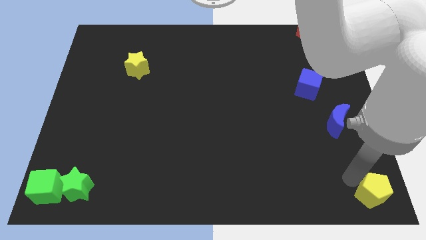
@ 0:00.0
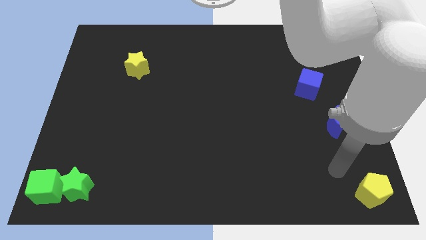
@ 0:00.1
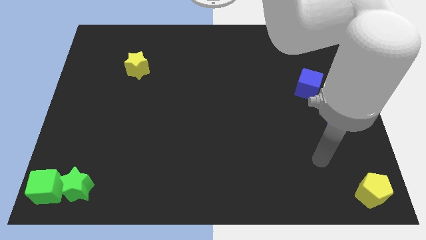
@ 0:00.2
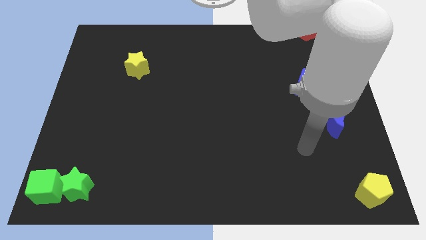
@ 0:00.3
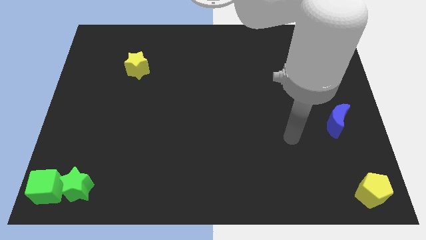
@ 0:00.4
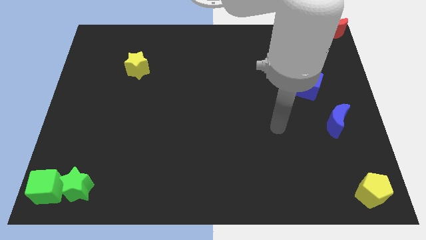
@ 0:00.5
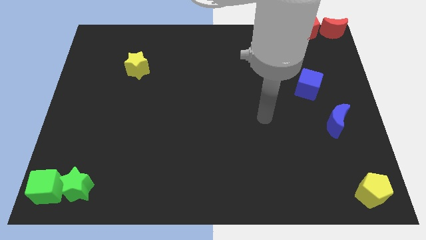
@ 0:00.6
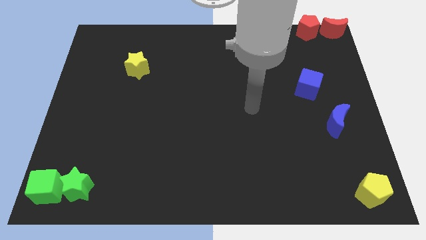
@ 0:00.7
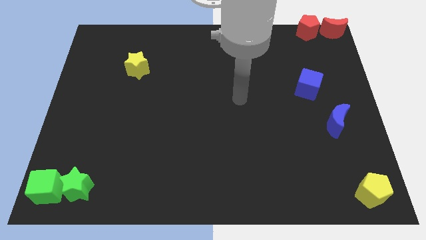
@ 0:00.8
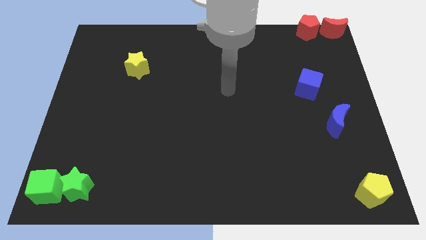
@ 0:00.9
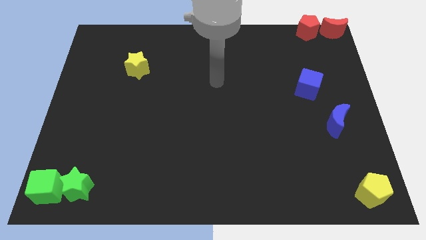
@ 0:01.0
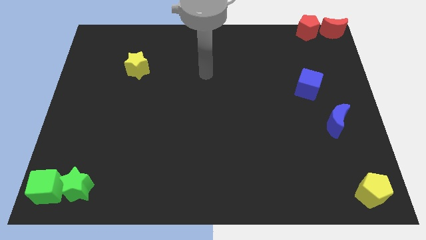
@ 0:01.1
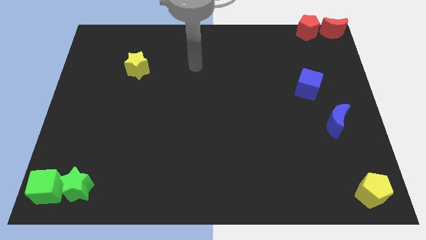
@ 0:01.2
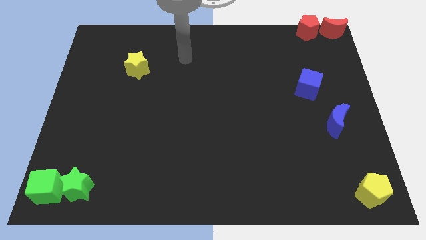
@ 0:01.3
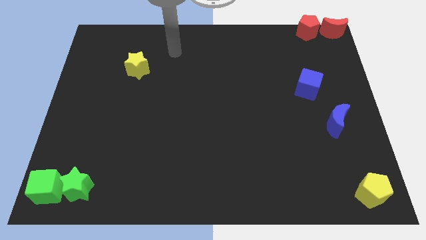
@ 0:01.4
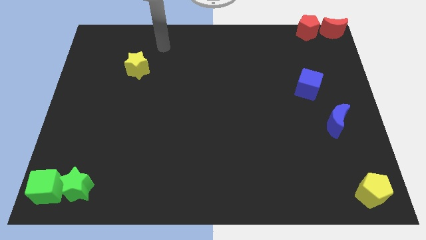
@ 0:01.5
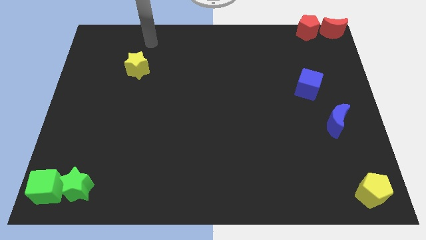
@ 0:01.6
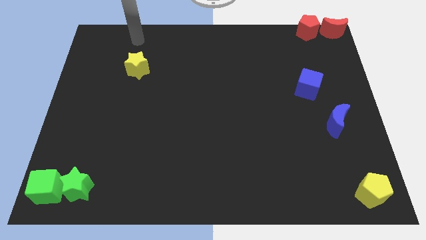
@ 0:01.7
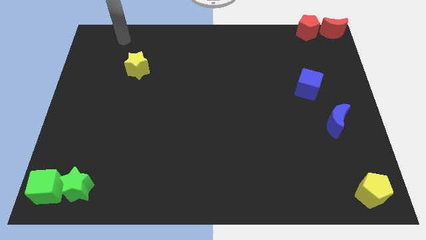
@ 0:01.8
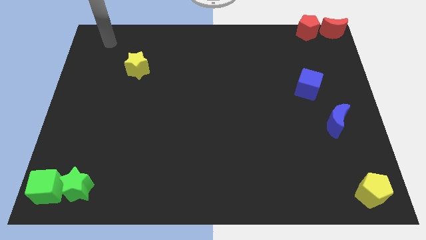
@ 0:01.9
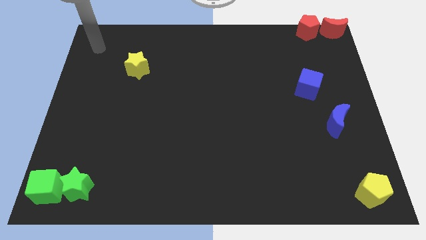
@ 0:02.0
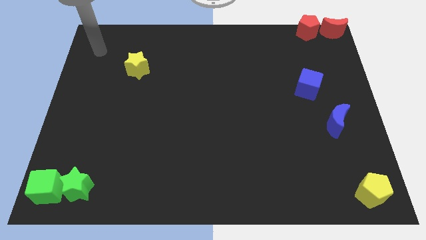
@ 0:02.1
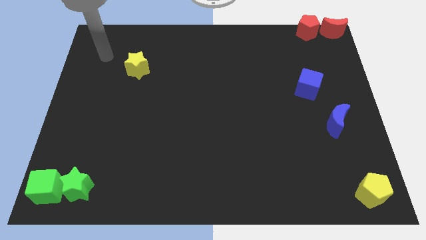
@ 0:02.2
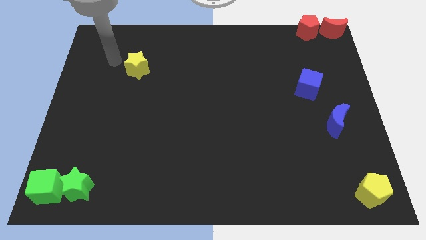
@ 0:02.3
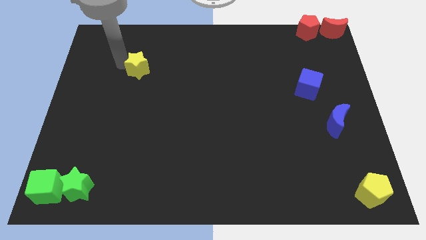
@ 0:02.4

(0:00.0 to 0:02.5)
move your arm to the top of the yellow star

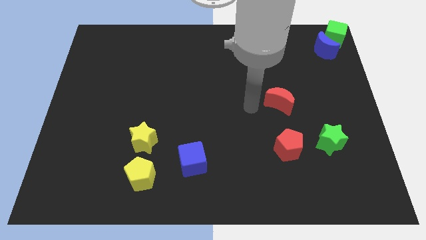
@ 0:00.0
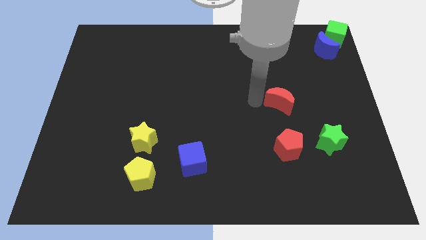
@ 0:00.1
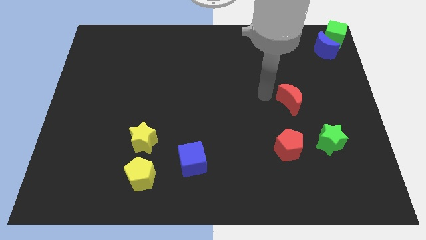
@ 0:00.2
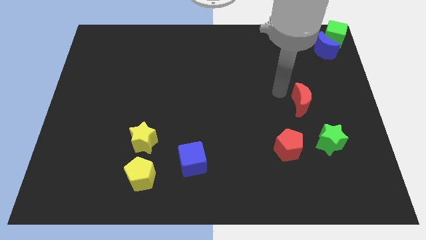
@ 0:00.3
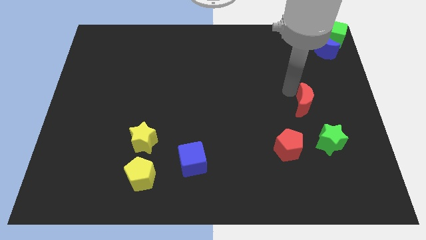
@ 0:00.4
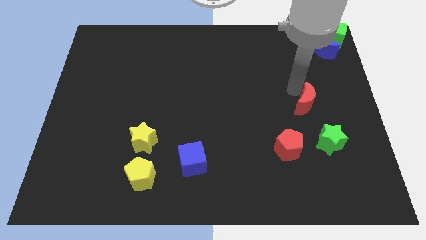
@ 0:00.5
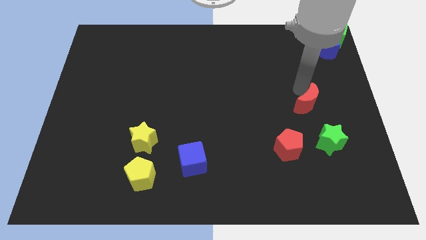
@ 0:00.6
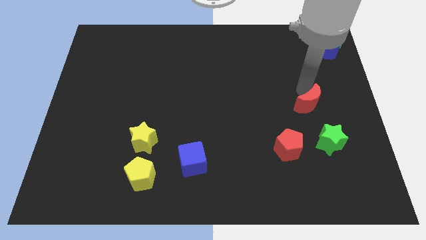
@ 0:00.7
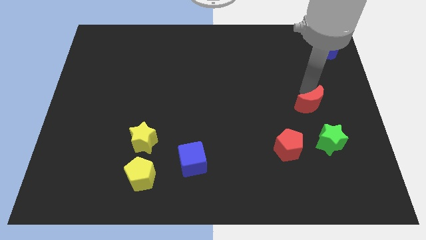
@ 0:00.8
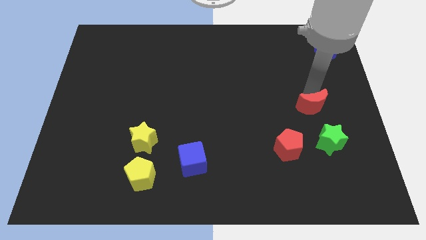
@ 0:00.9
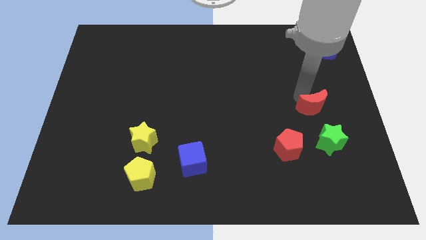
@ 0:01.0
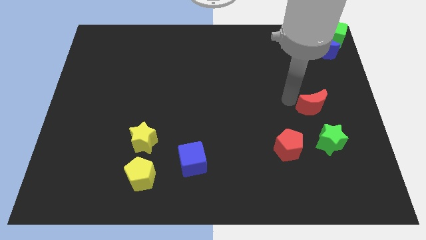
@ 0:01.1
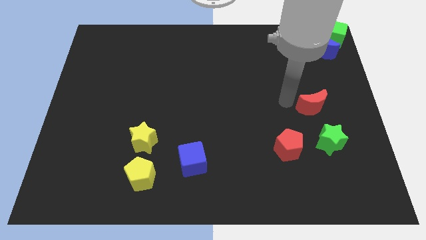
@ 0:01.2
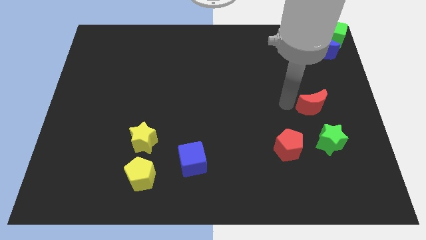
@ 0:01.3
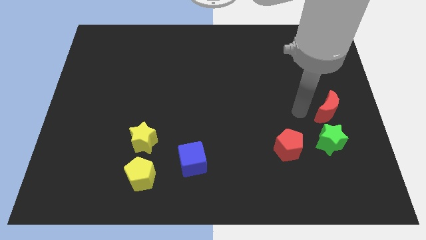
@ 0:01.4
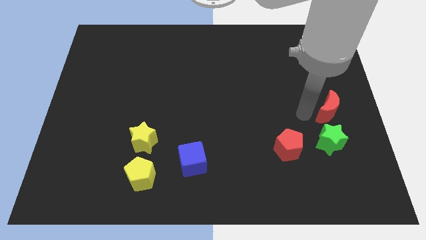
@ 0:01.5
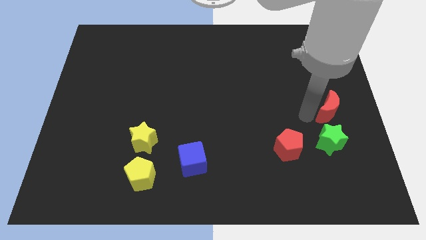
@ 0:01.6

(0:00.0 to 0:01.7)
place the red crescent above the green star

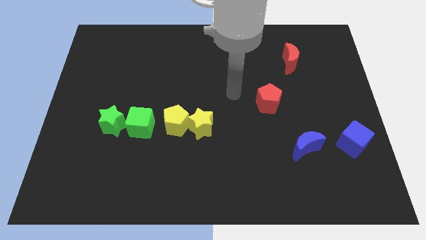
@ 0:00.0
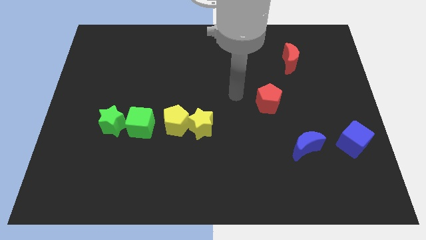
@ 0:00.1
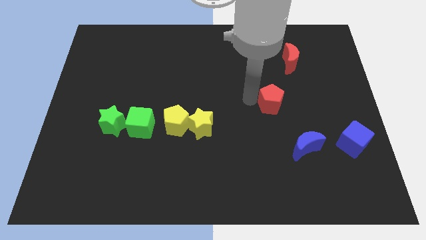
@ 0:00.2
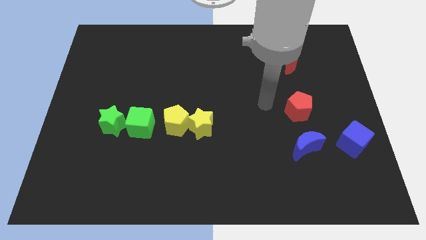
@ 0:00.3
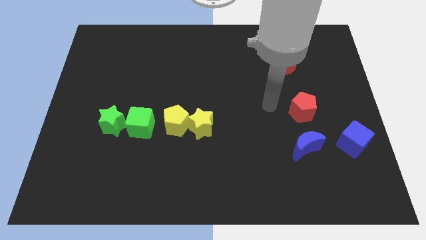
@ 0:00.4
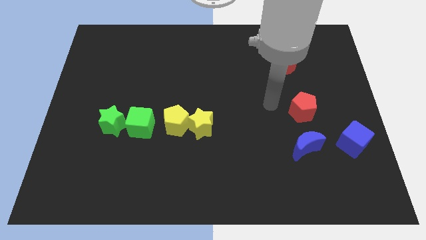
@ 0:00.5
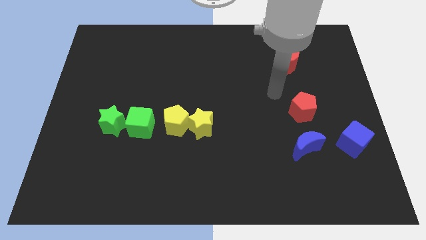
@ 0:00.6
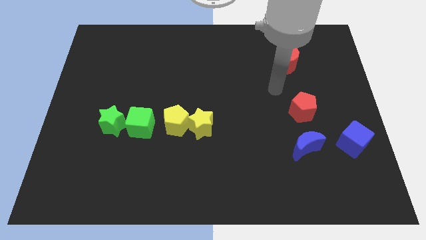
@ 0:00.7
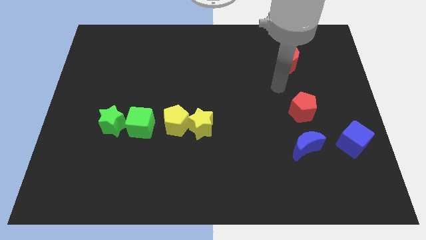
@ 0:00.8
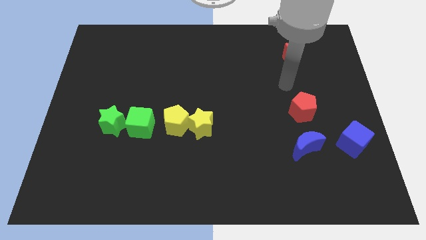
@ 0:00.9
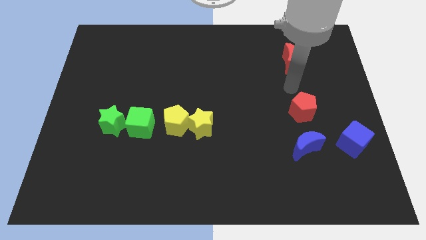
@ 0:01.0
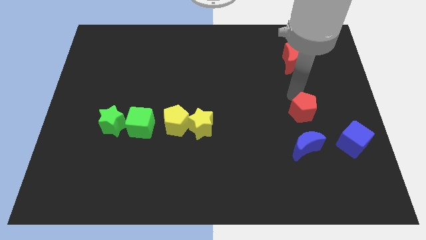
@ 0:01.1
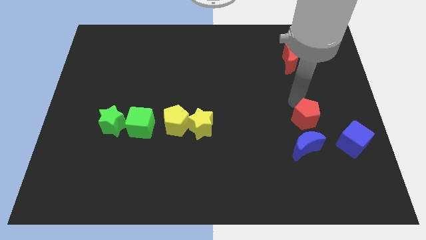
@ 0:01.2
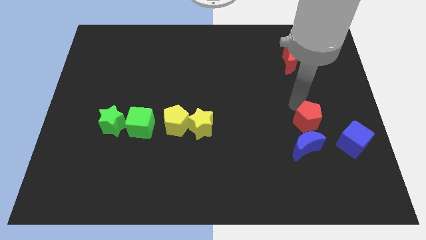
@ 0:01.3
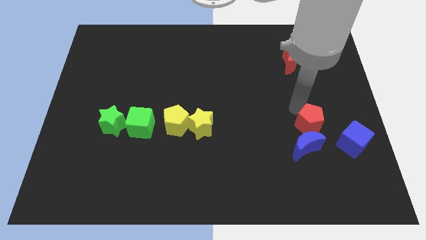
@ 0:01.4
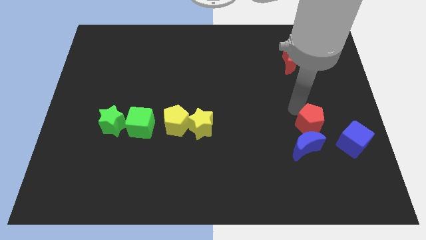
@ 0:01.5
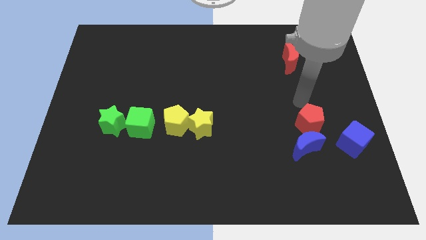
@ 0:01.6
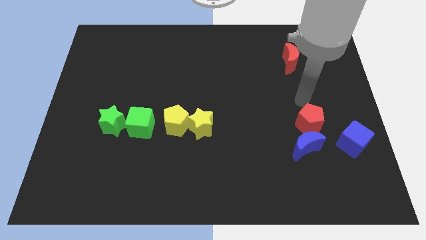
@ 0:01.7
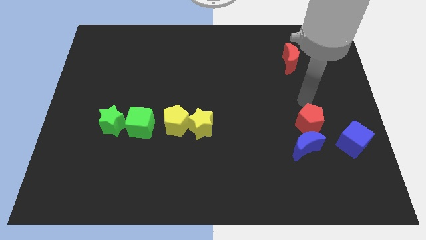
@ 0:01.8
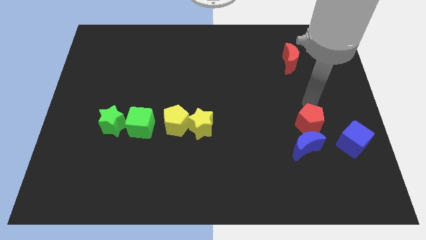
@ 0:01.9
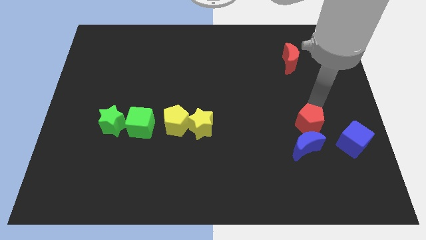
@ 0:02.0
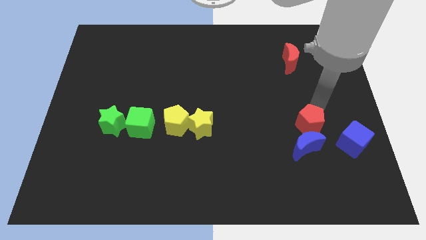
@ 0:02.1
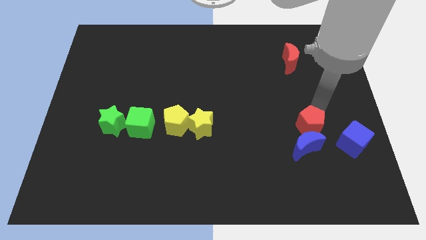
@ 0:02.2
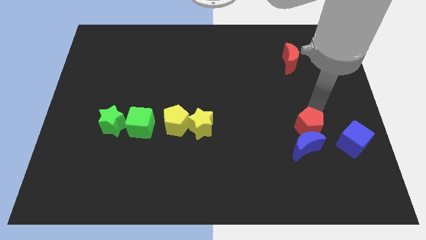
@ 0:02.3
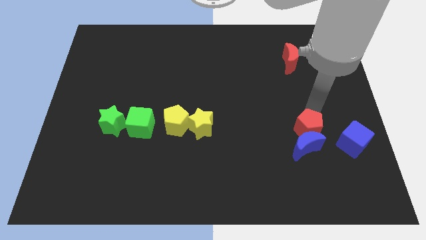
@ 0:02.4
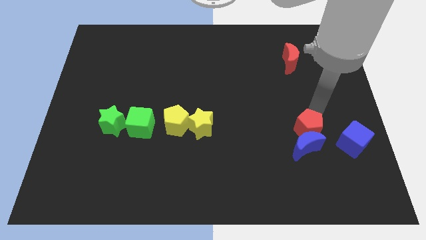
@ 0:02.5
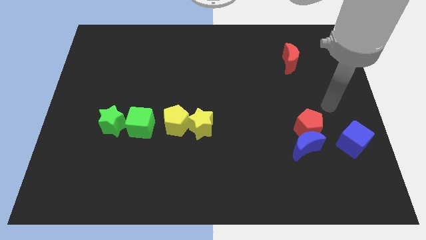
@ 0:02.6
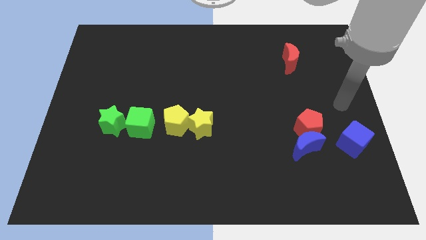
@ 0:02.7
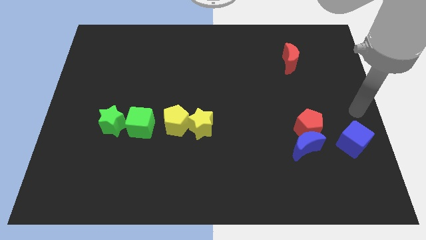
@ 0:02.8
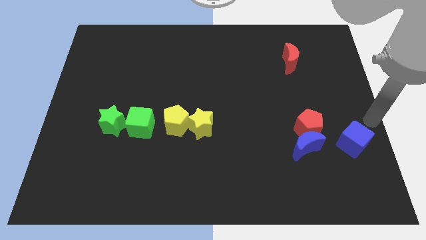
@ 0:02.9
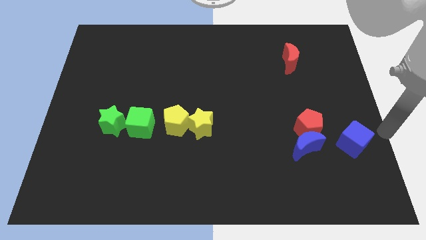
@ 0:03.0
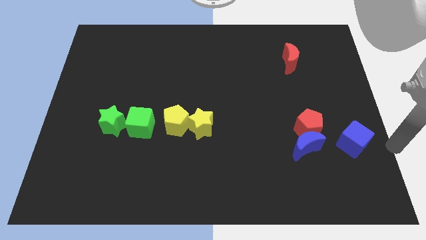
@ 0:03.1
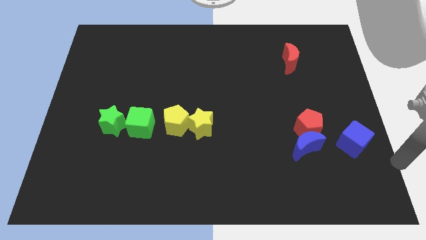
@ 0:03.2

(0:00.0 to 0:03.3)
place the red pentagon on top of blue crescent

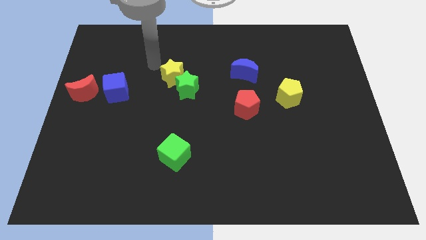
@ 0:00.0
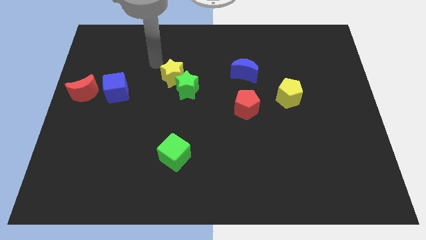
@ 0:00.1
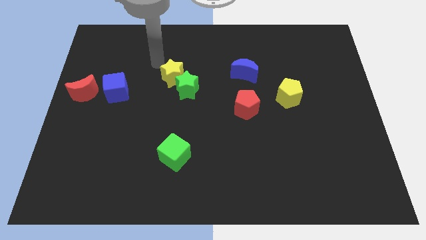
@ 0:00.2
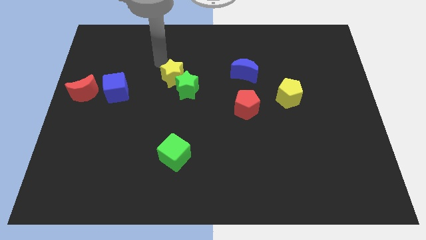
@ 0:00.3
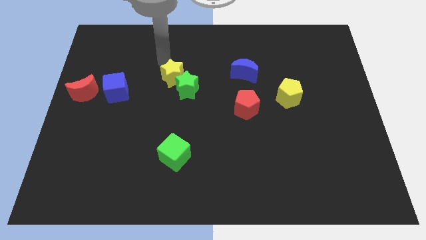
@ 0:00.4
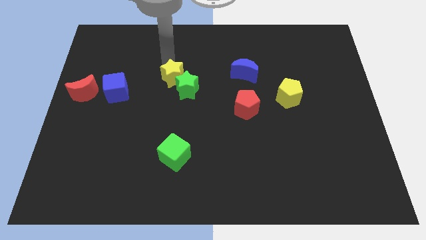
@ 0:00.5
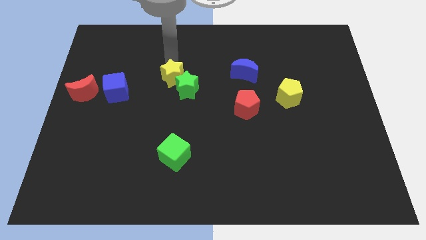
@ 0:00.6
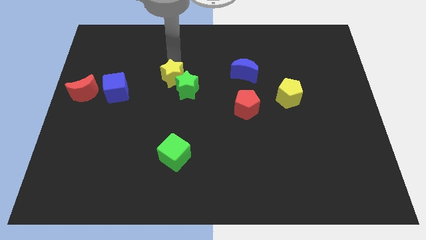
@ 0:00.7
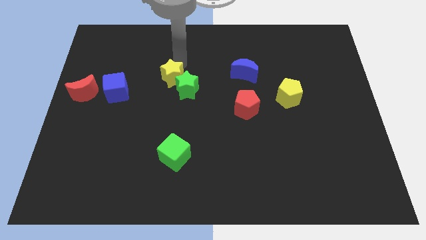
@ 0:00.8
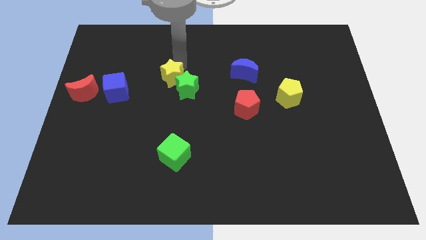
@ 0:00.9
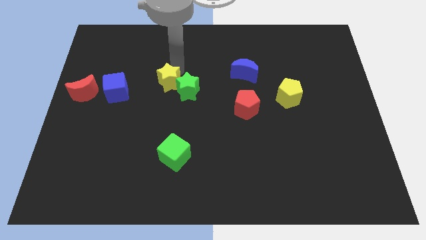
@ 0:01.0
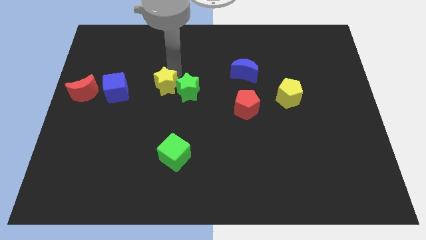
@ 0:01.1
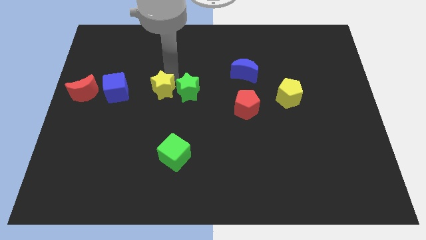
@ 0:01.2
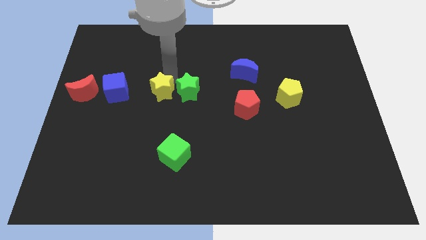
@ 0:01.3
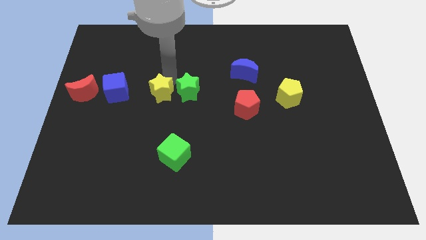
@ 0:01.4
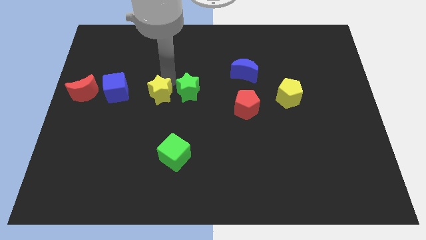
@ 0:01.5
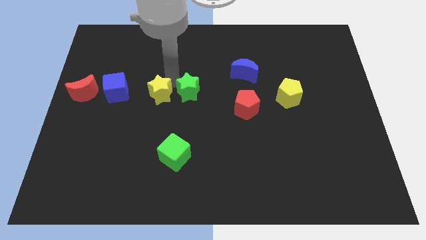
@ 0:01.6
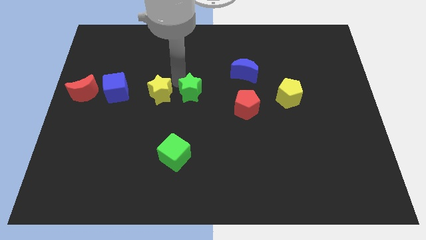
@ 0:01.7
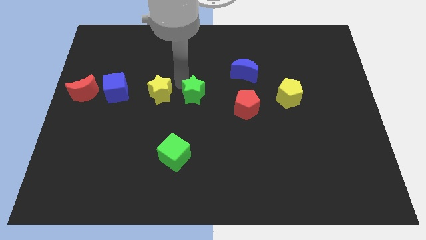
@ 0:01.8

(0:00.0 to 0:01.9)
push the yellow star parallel to the blue cube
